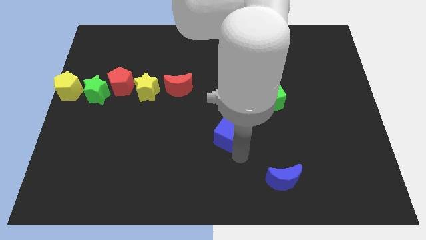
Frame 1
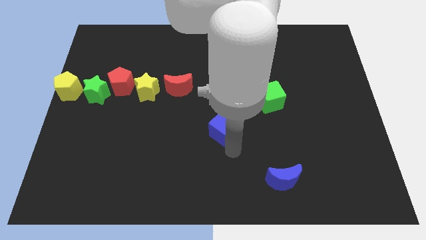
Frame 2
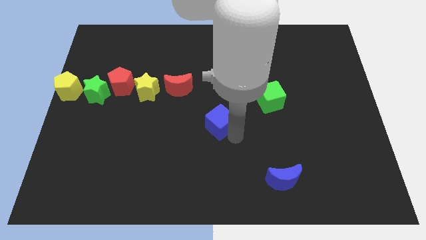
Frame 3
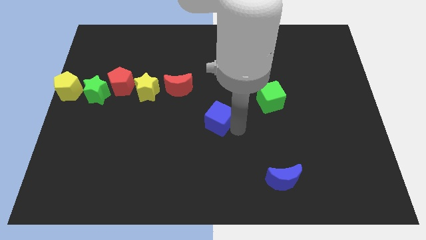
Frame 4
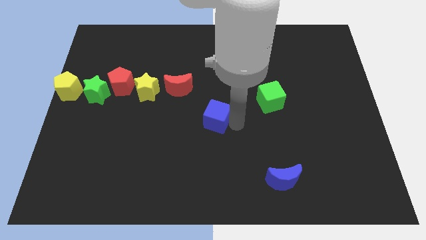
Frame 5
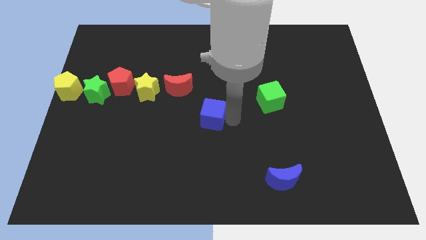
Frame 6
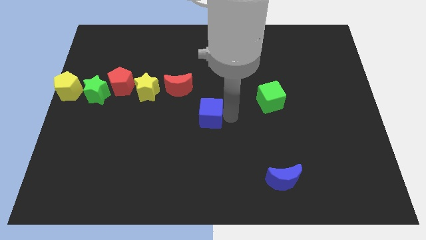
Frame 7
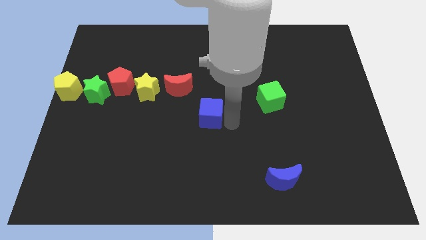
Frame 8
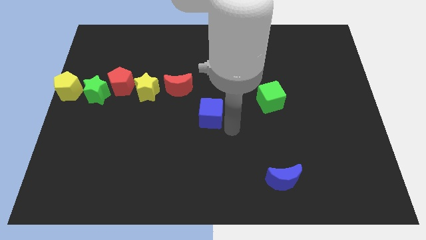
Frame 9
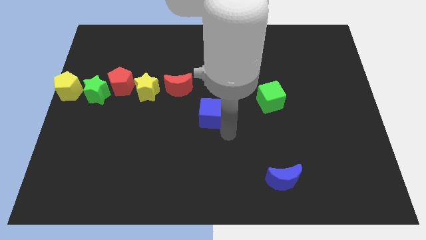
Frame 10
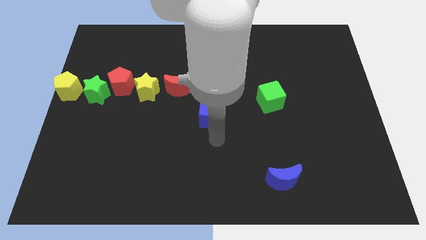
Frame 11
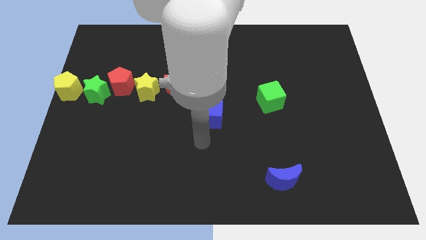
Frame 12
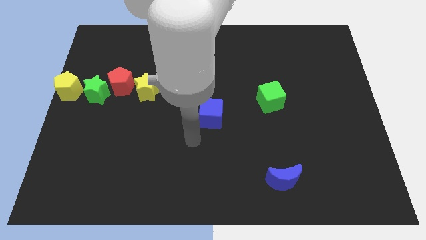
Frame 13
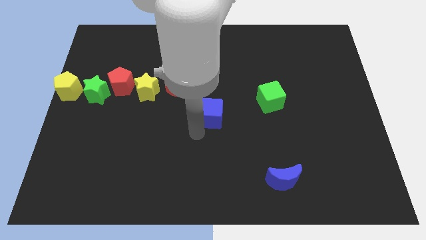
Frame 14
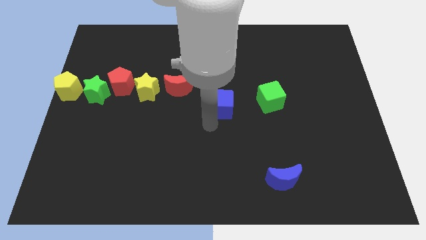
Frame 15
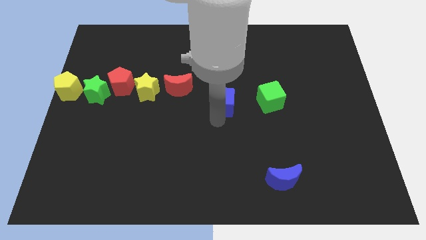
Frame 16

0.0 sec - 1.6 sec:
move the blue cube to the left of the green cube

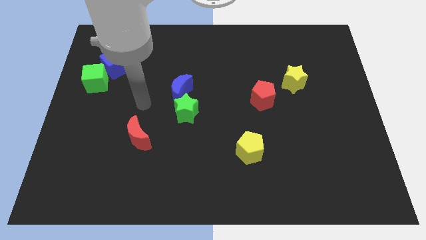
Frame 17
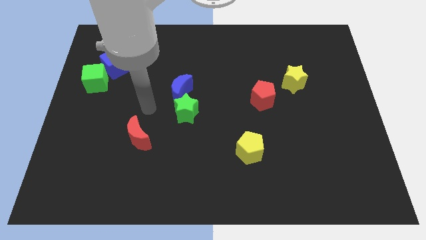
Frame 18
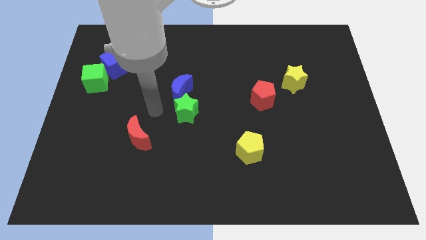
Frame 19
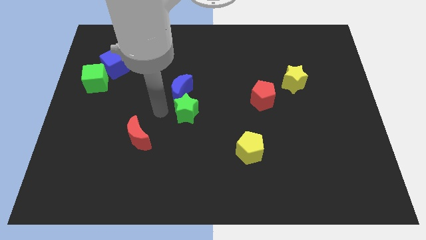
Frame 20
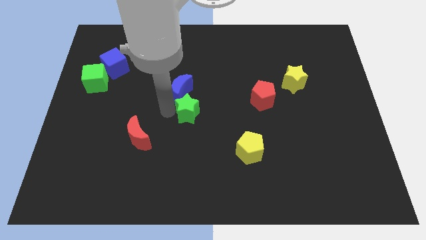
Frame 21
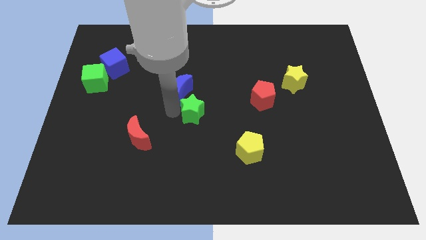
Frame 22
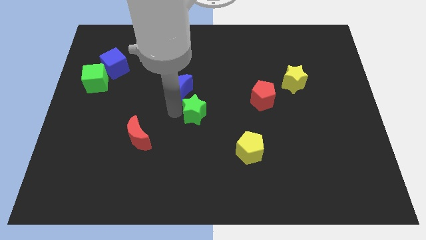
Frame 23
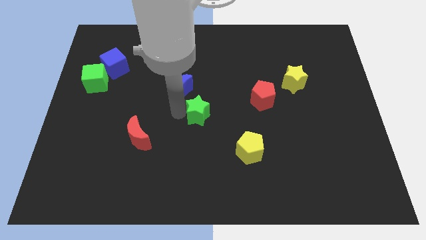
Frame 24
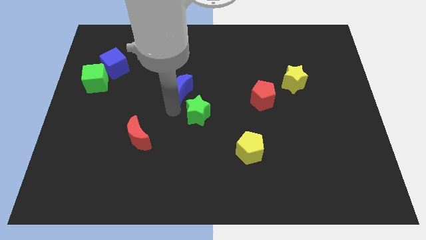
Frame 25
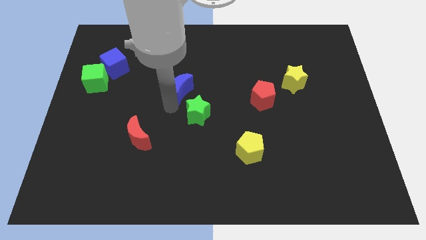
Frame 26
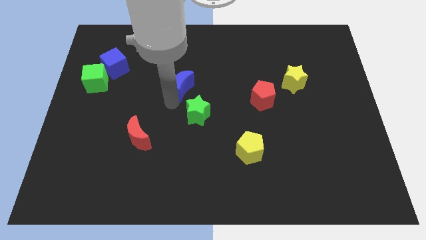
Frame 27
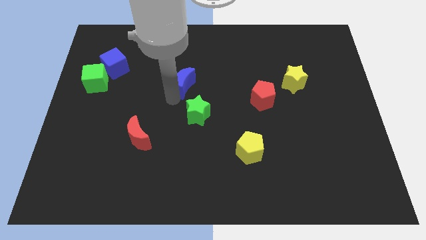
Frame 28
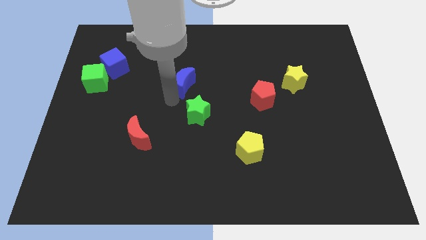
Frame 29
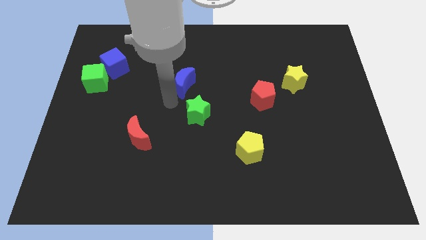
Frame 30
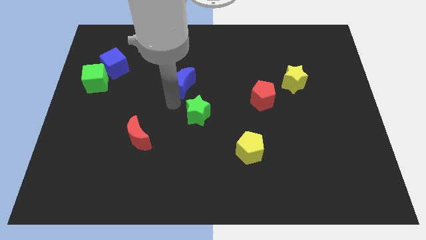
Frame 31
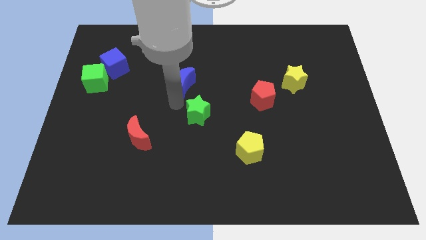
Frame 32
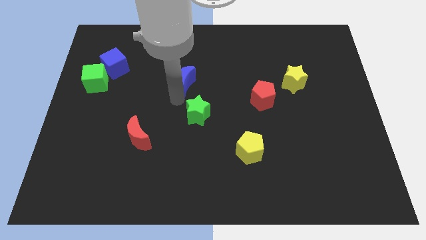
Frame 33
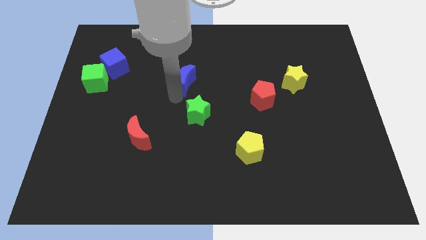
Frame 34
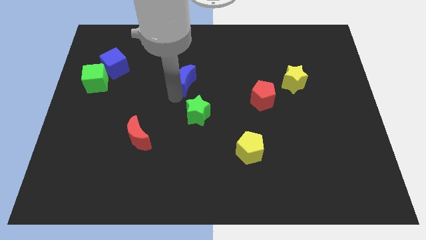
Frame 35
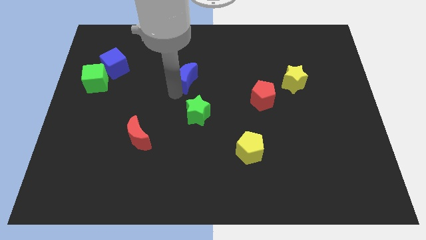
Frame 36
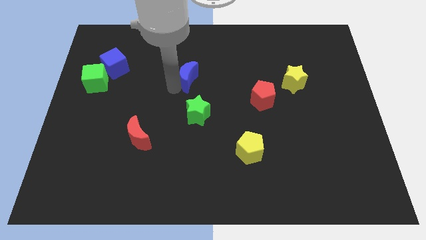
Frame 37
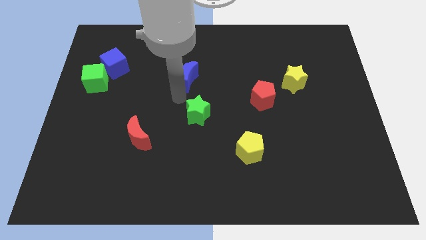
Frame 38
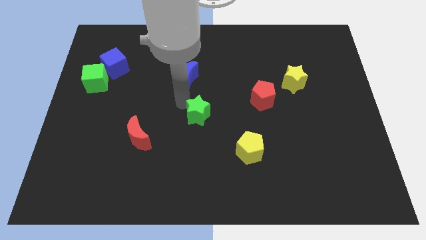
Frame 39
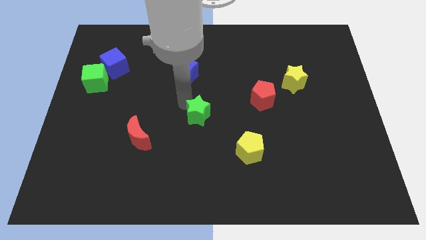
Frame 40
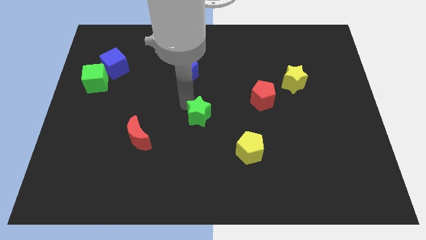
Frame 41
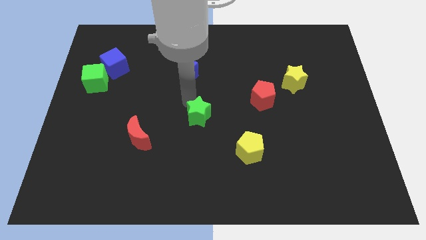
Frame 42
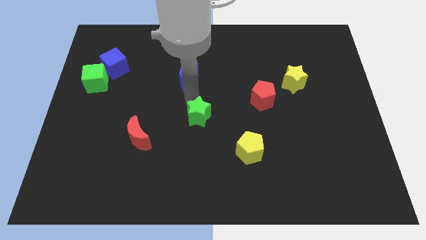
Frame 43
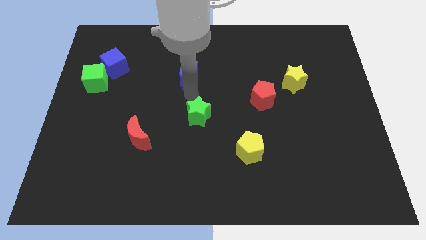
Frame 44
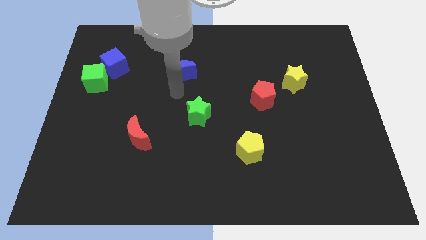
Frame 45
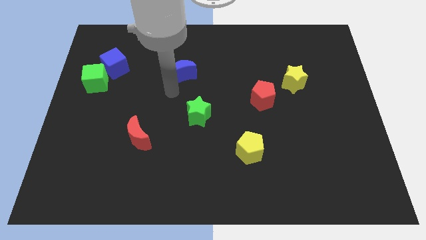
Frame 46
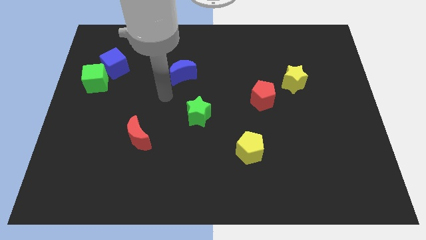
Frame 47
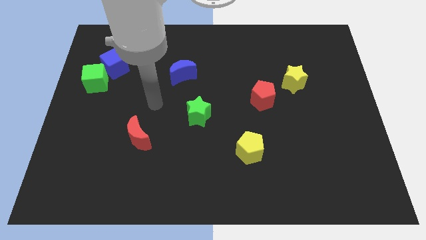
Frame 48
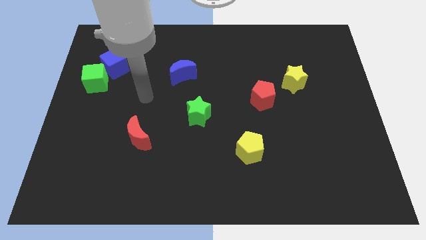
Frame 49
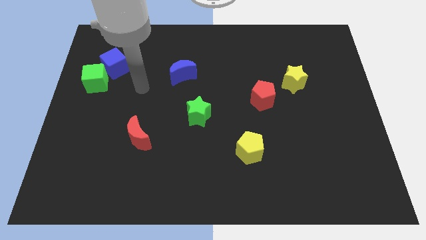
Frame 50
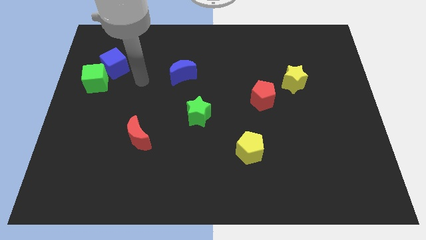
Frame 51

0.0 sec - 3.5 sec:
separate blue crescent and green star

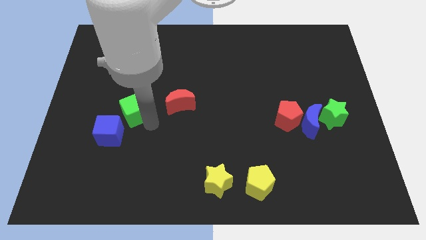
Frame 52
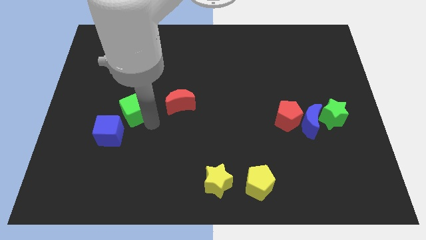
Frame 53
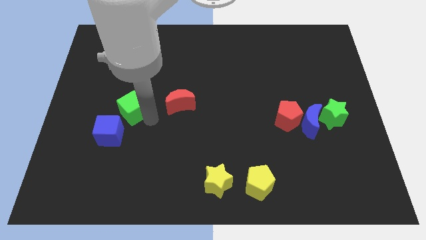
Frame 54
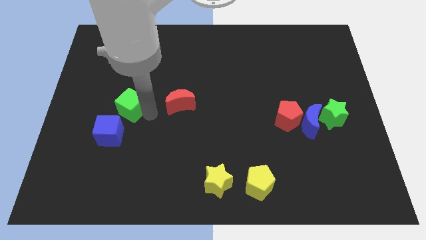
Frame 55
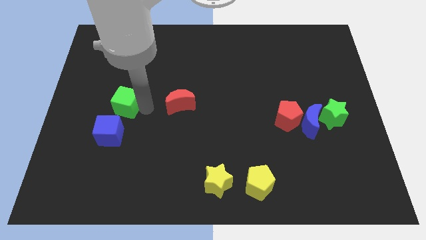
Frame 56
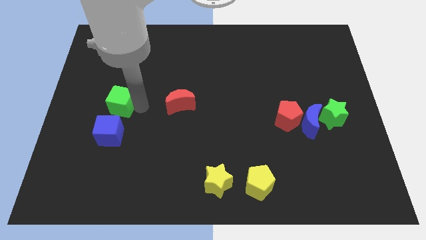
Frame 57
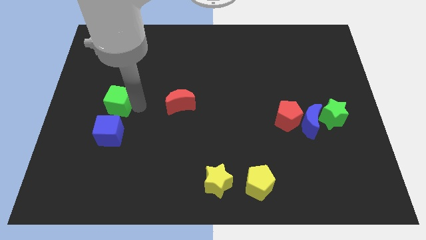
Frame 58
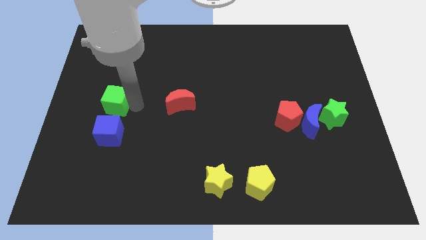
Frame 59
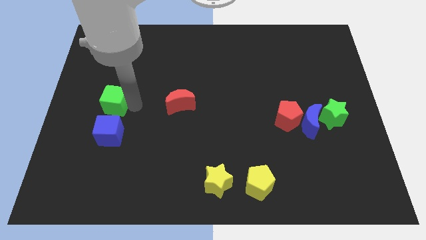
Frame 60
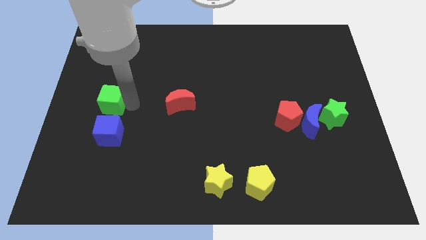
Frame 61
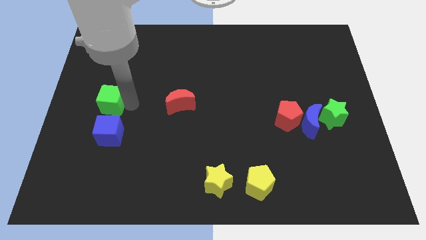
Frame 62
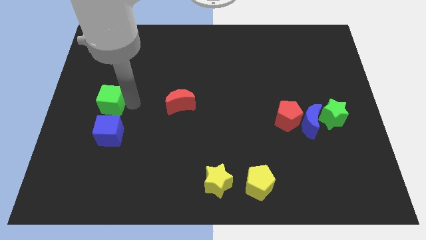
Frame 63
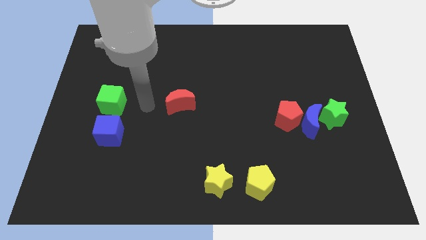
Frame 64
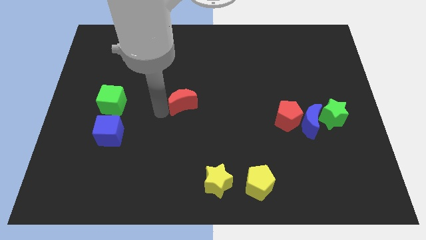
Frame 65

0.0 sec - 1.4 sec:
push the green cube to the top of the blue cube

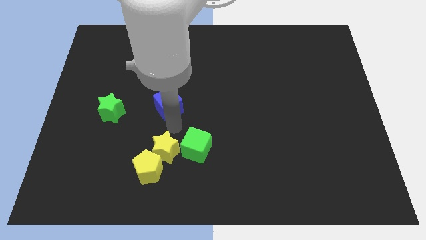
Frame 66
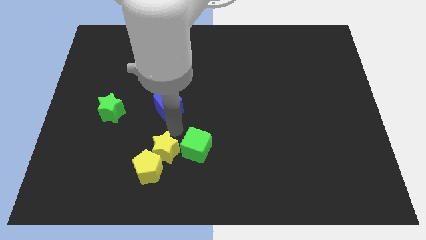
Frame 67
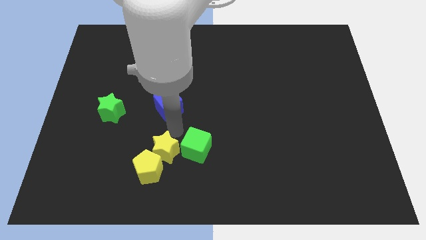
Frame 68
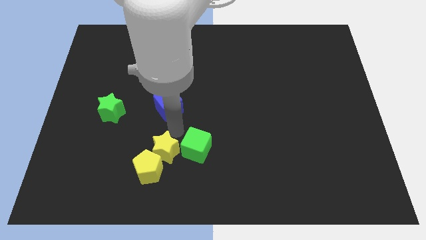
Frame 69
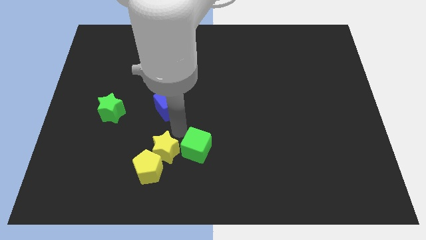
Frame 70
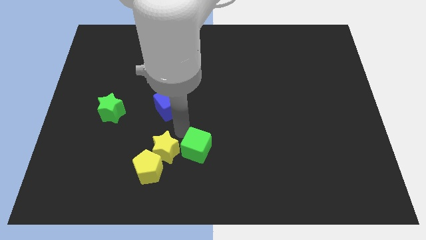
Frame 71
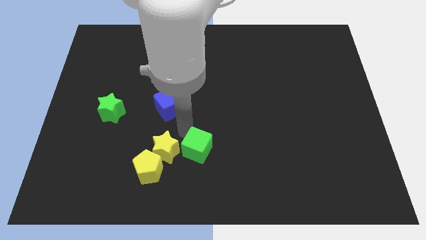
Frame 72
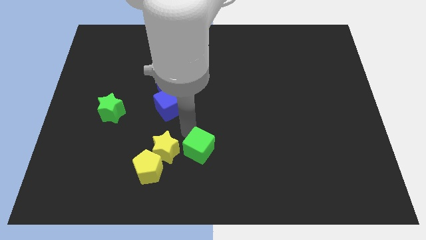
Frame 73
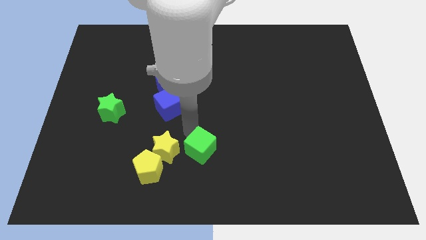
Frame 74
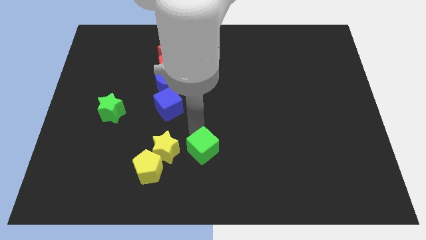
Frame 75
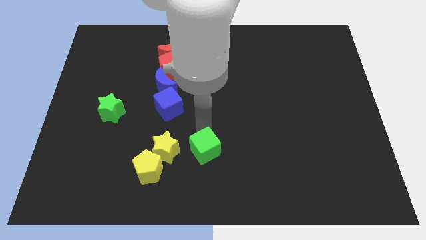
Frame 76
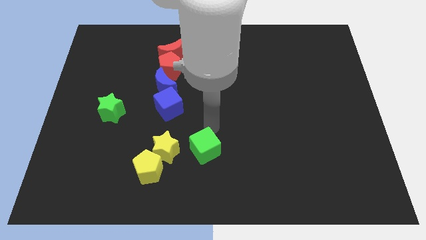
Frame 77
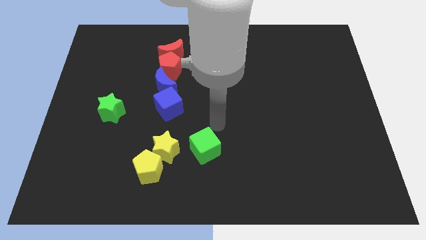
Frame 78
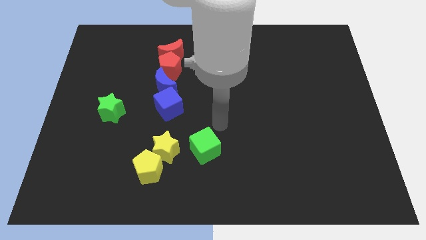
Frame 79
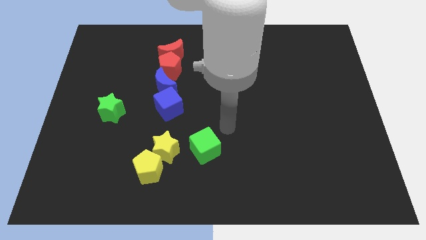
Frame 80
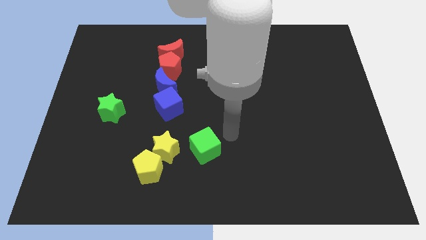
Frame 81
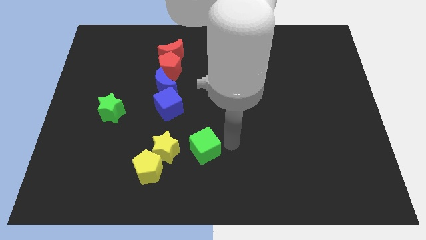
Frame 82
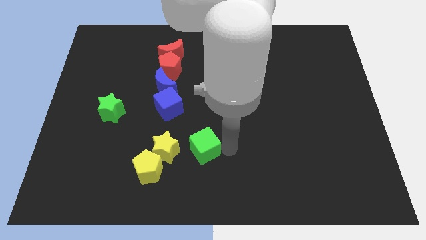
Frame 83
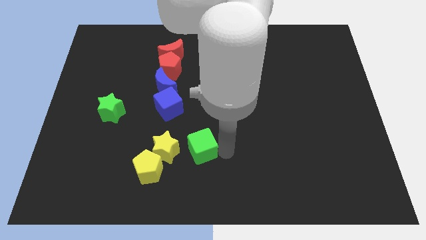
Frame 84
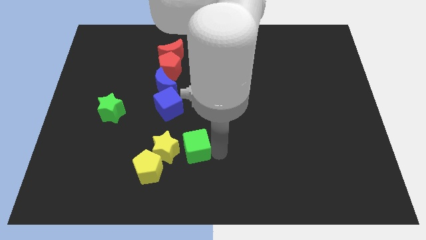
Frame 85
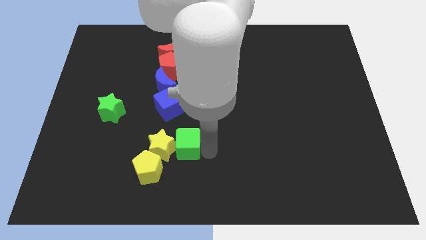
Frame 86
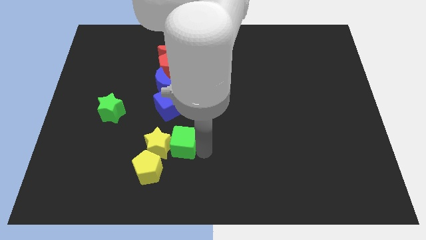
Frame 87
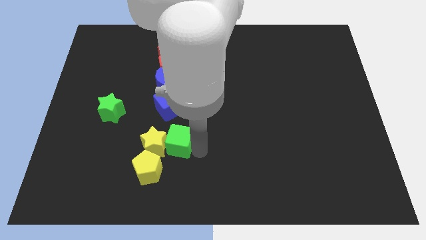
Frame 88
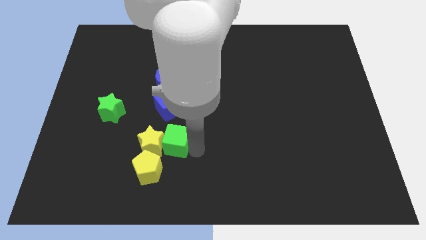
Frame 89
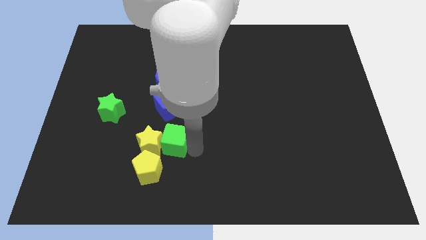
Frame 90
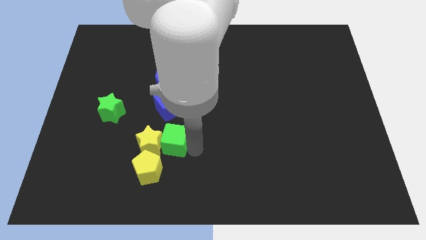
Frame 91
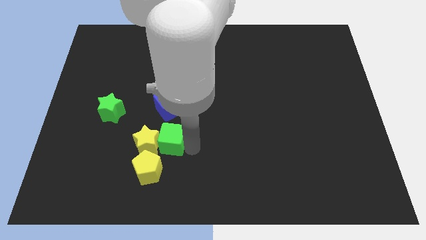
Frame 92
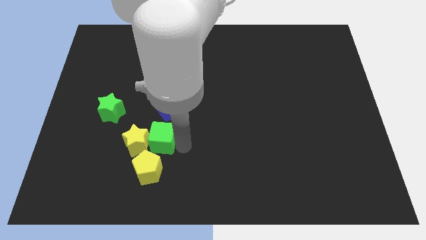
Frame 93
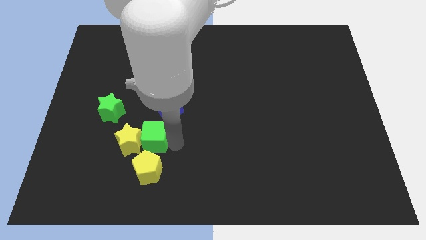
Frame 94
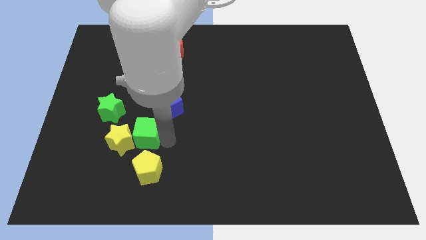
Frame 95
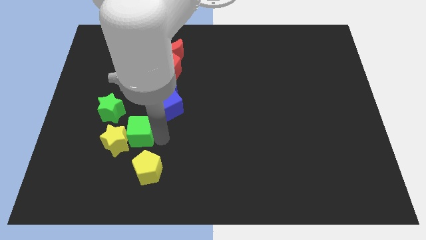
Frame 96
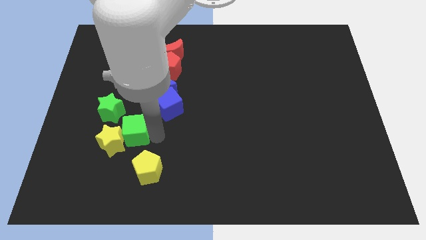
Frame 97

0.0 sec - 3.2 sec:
put the green cube and yellow star diagonally in between the green star and yellow pentagon
